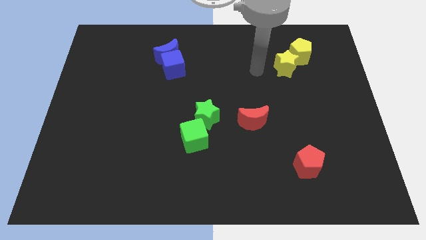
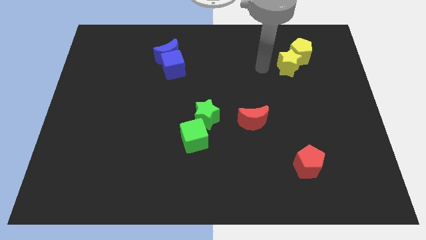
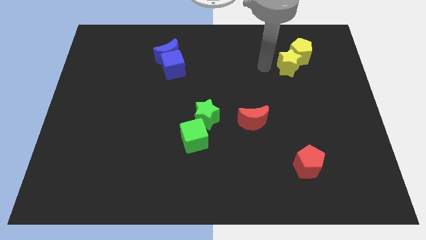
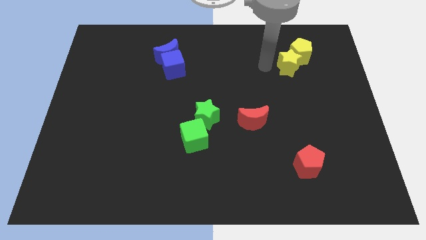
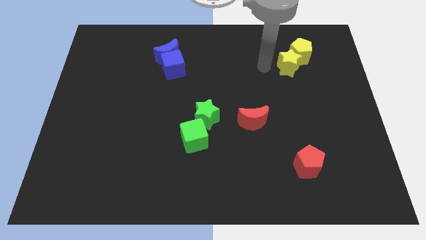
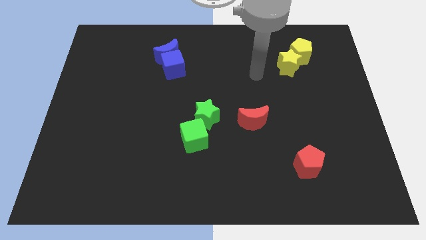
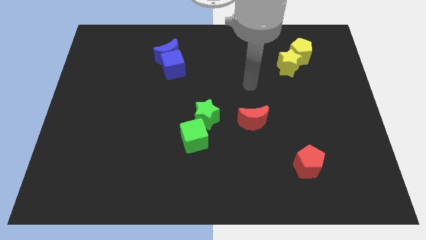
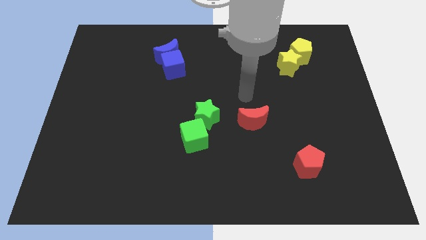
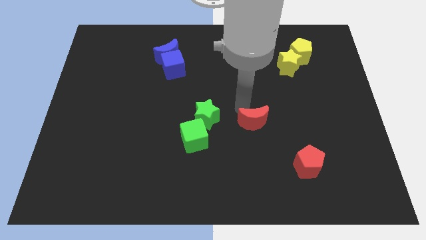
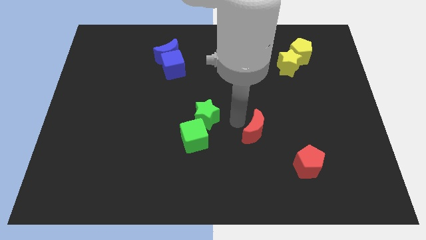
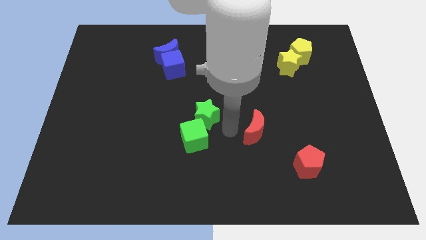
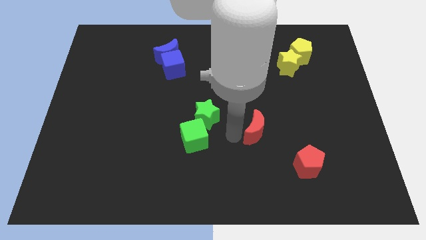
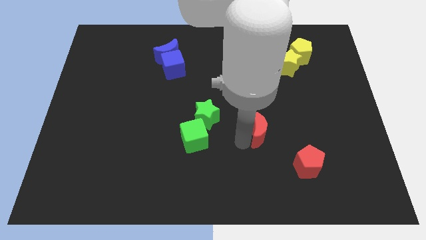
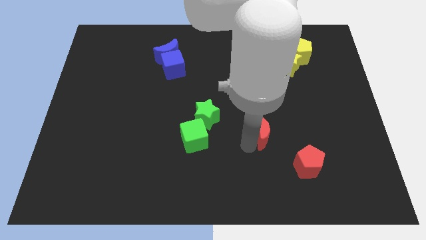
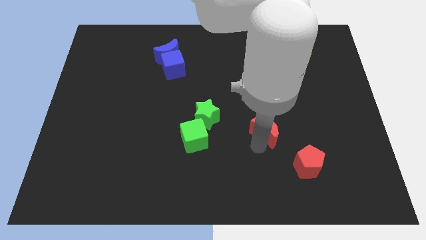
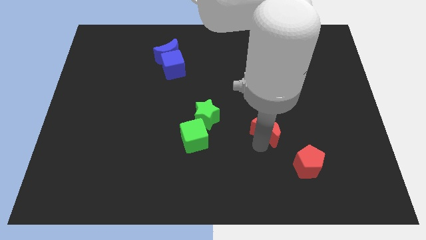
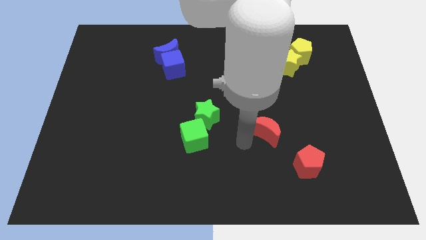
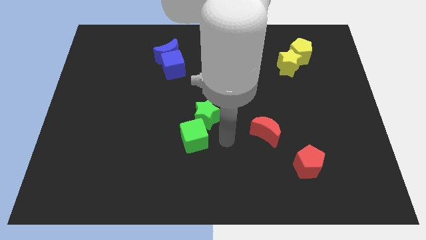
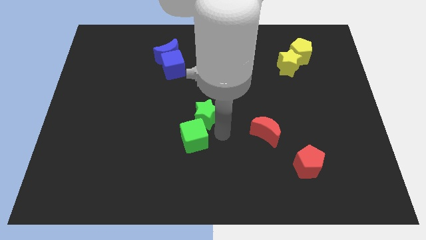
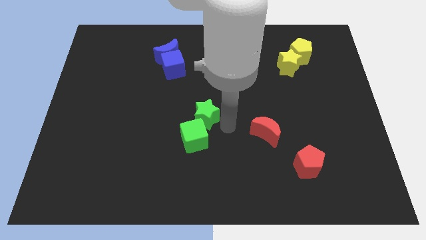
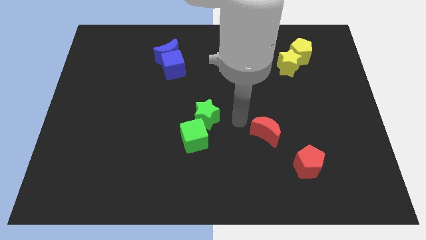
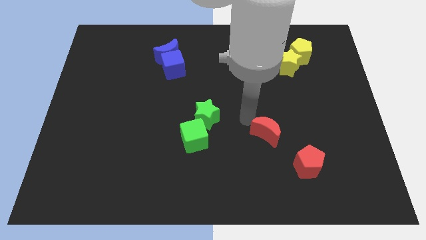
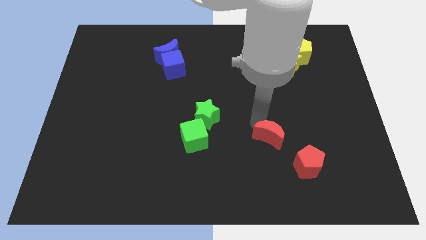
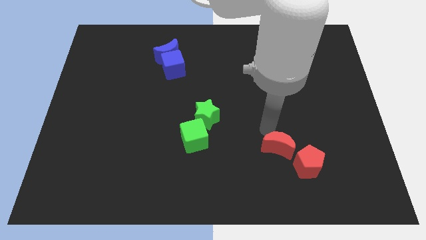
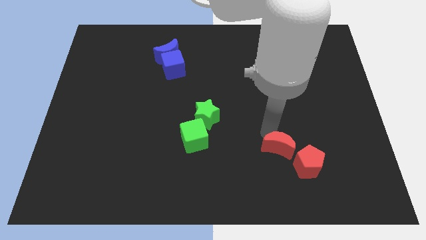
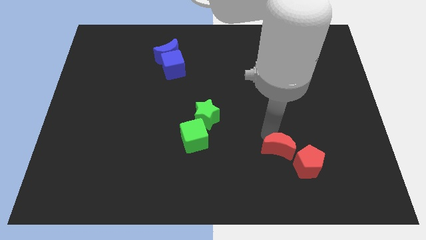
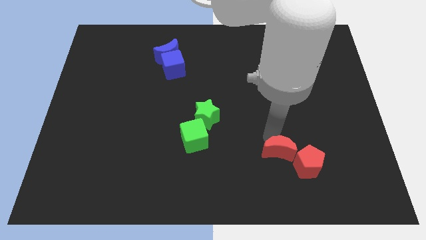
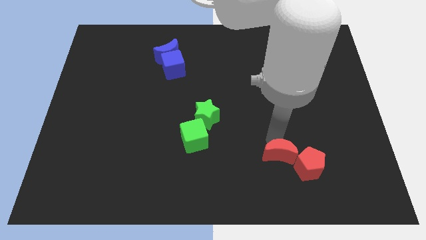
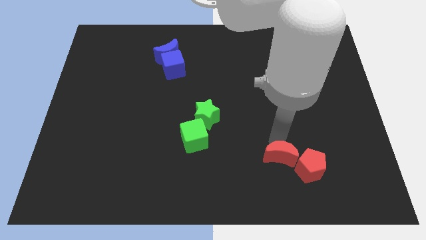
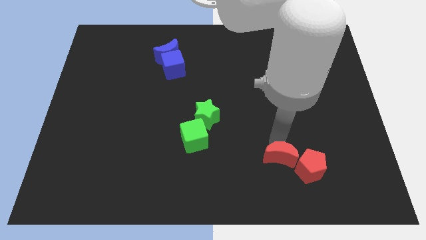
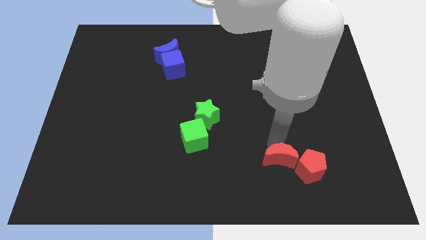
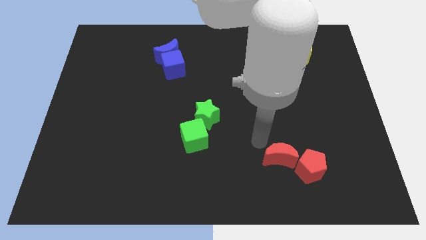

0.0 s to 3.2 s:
put the red crescent on the left side of the red pentagon

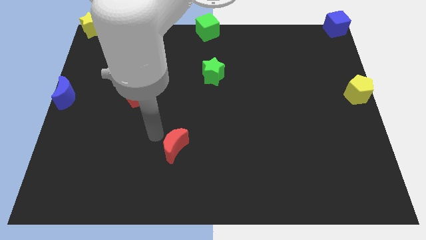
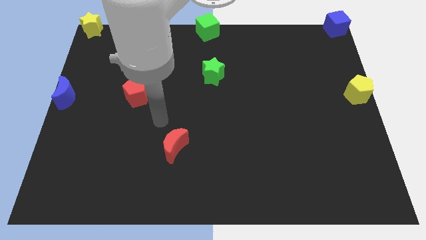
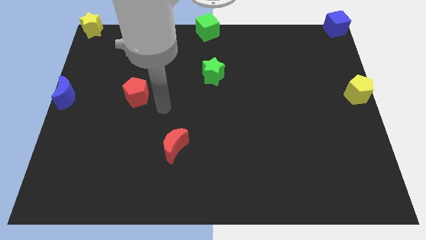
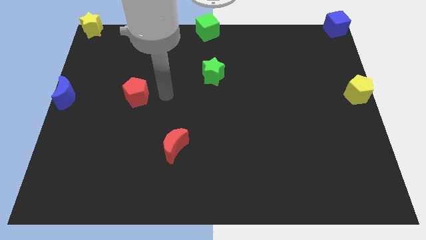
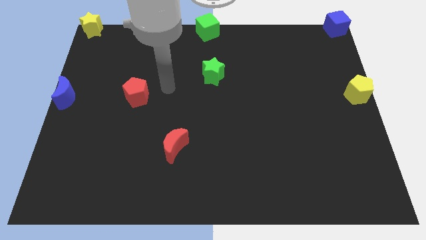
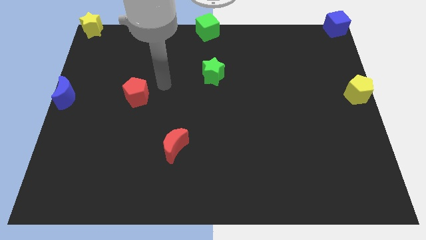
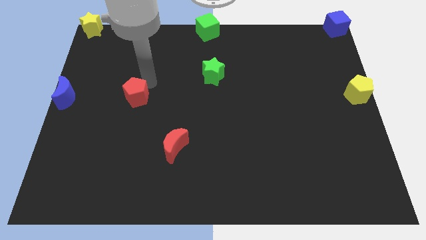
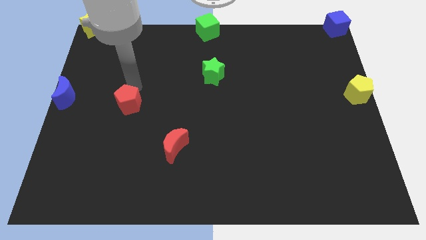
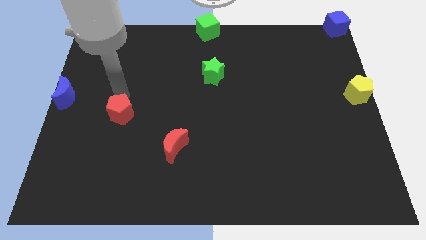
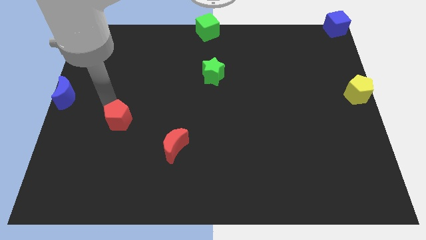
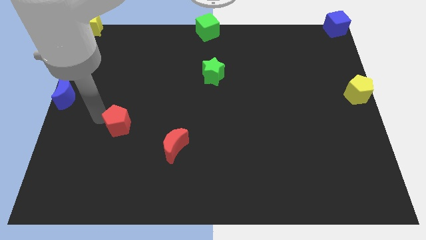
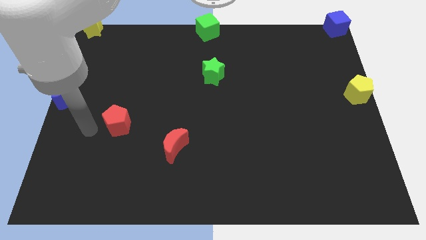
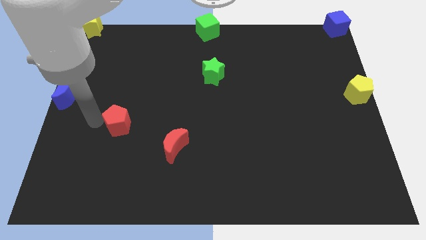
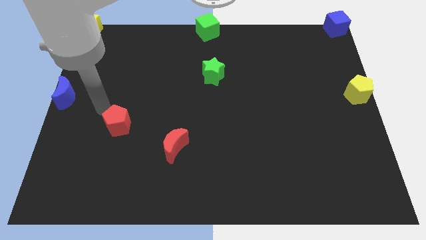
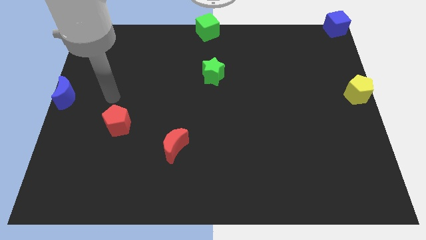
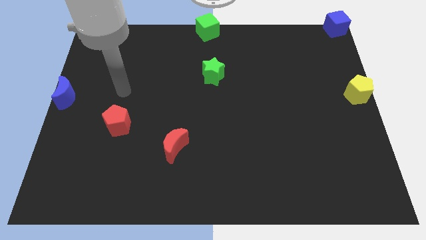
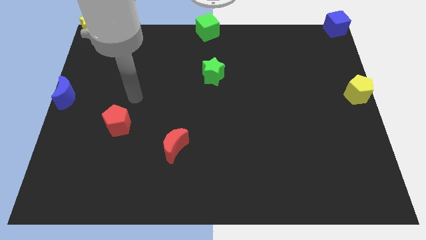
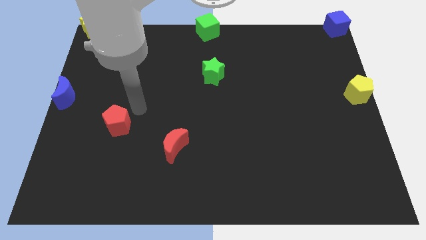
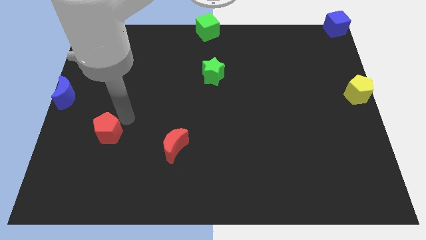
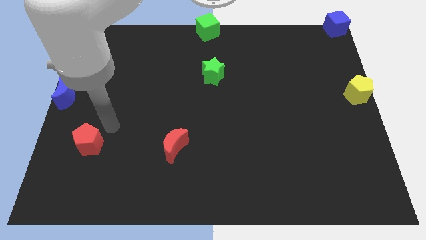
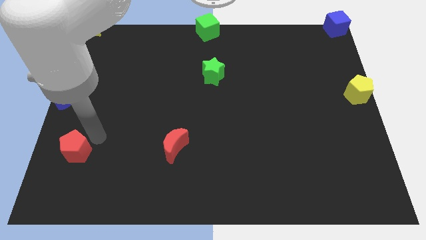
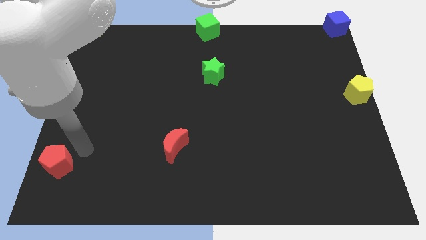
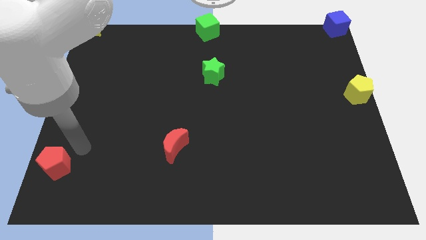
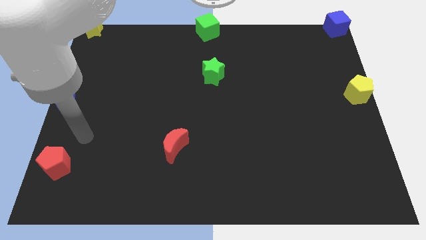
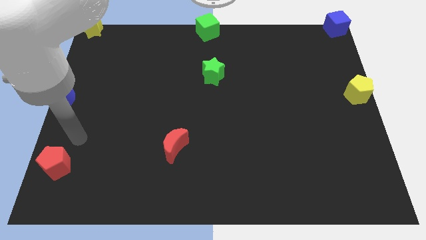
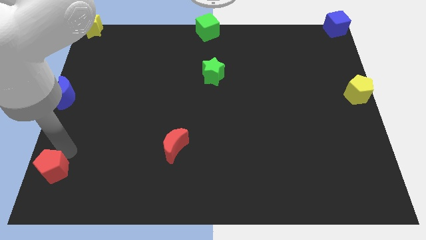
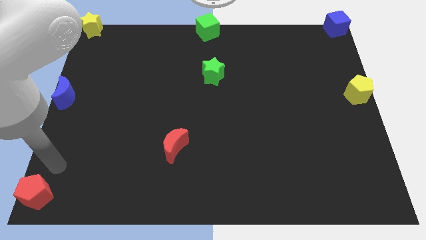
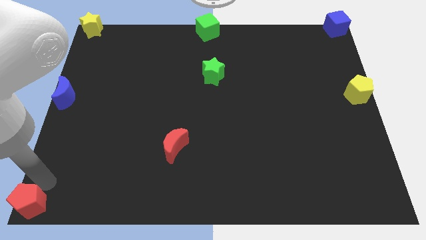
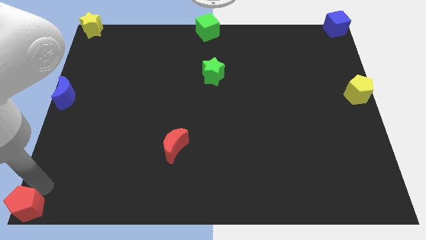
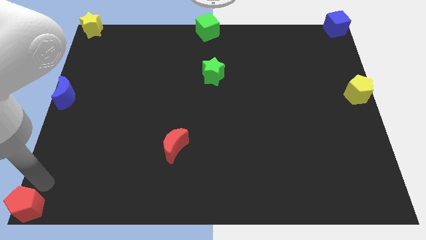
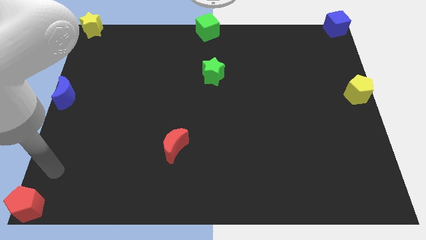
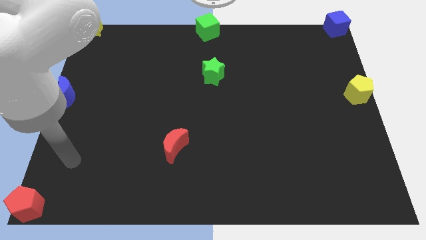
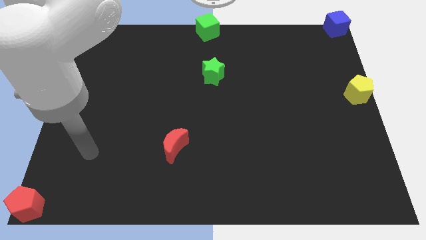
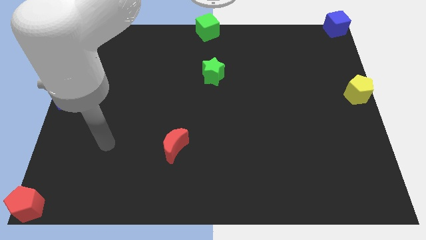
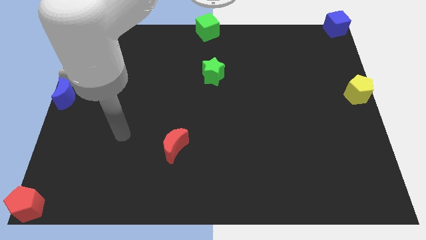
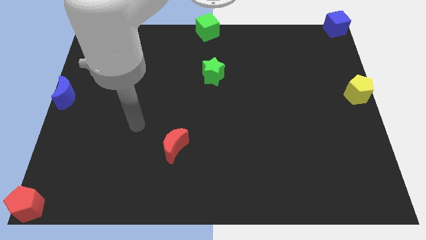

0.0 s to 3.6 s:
move the red pentagon to the bottom left corner

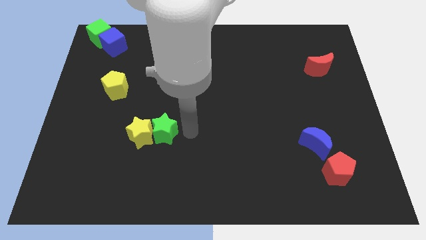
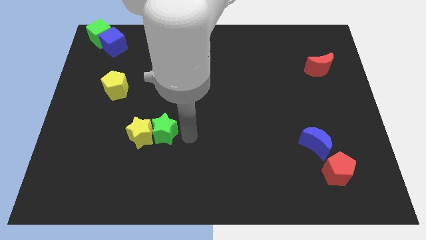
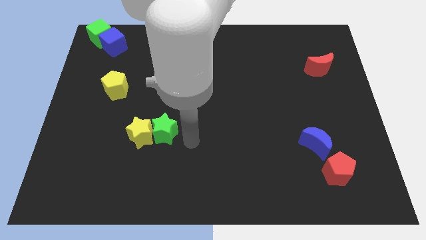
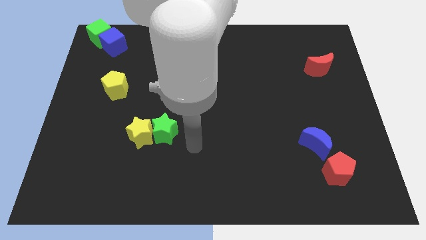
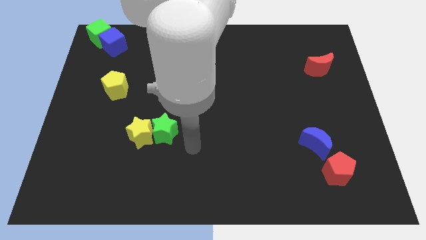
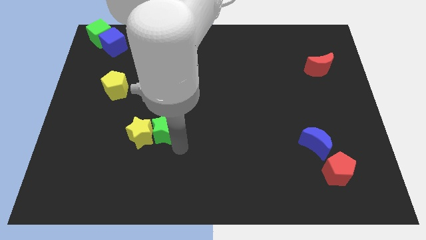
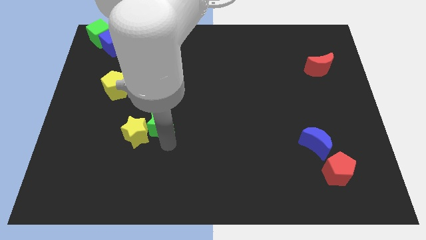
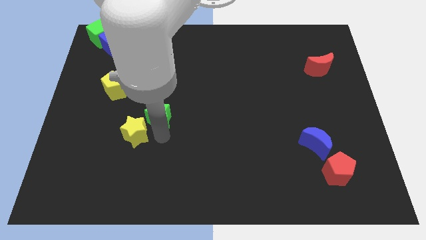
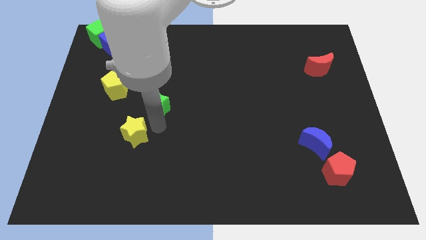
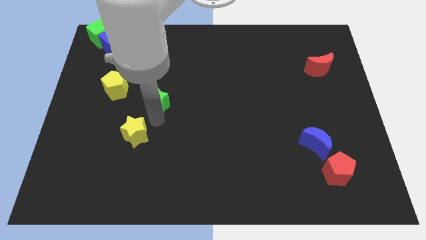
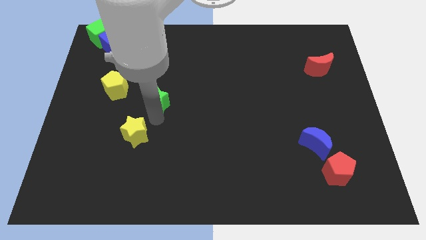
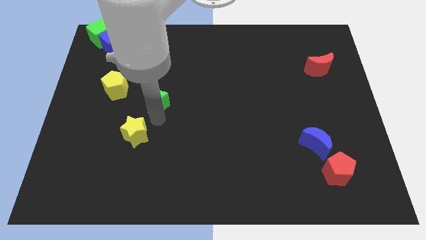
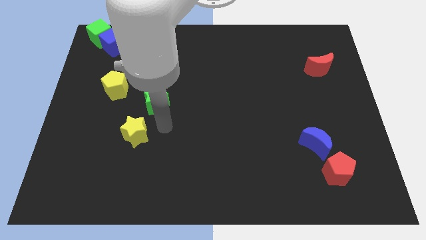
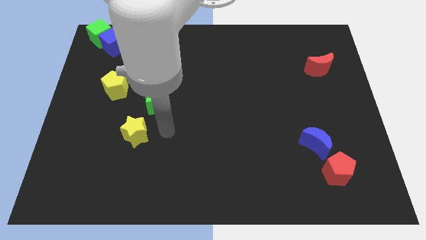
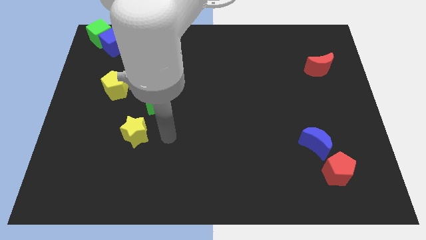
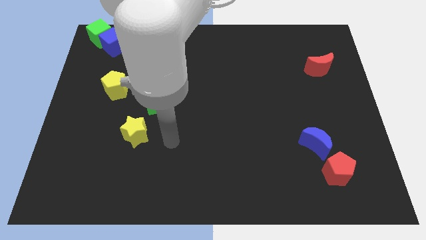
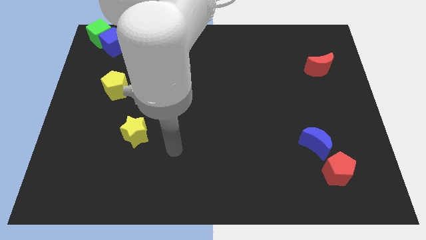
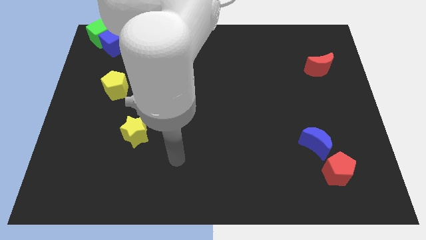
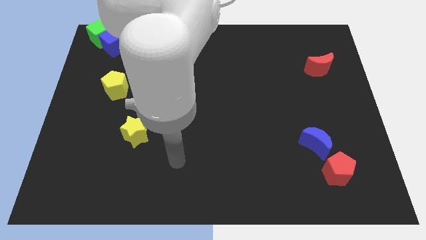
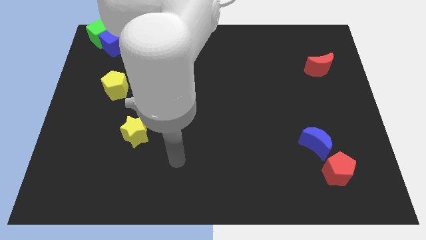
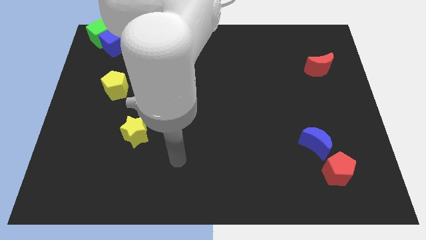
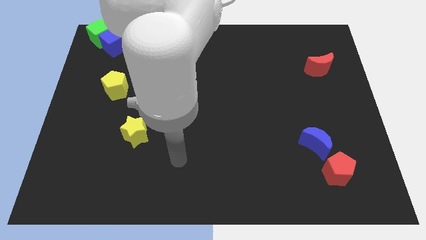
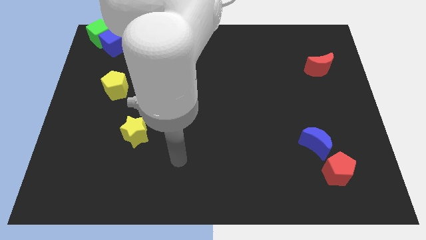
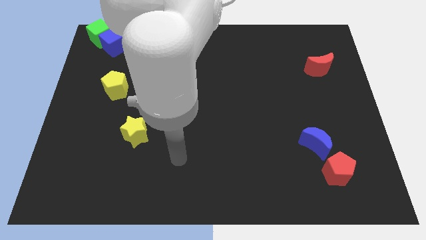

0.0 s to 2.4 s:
separate the green star and yellow star
